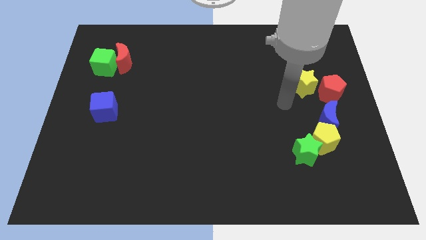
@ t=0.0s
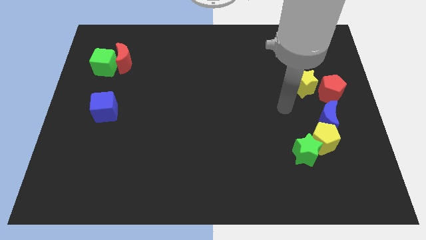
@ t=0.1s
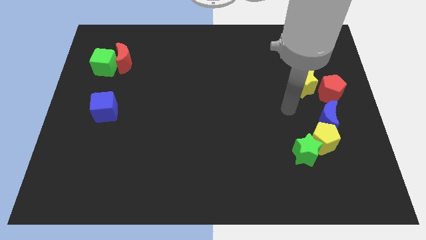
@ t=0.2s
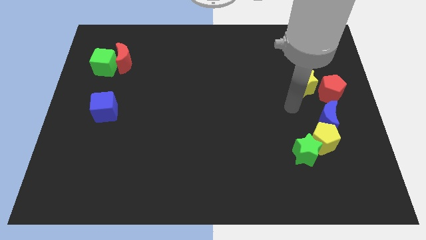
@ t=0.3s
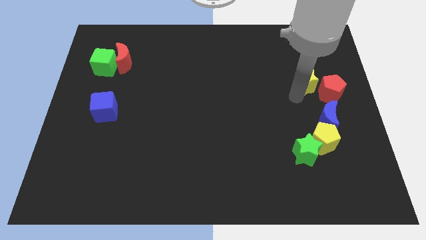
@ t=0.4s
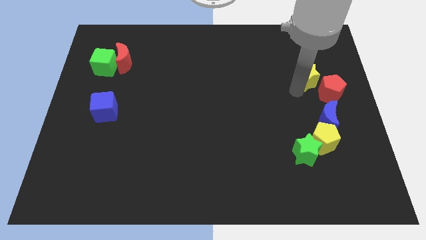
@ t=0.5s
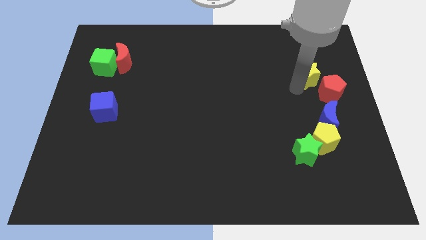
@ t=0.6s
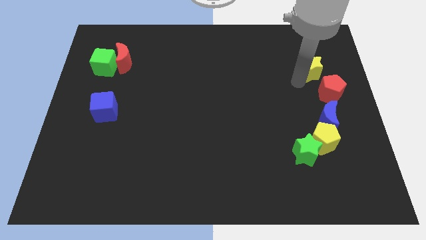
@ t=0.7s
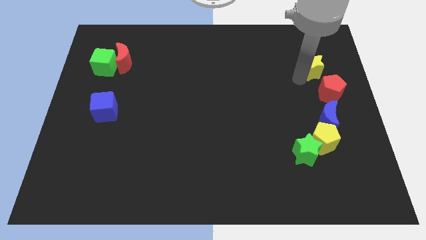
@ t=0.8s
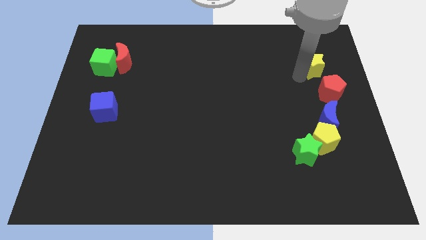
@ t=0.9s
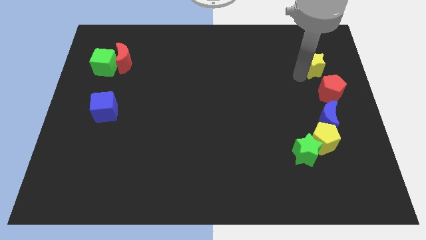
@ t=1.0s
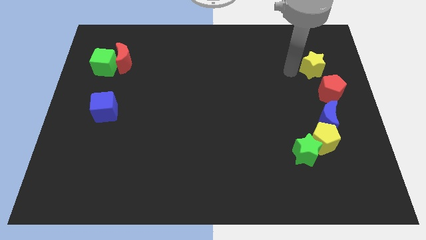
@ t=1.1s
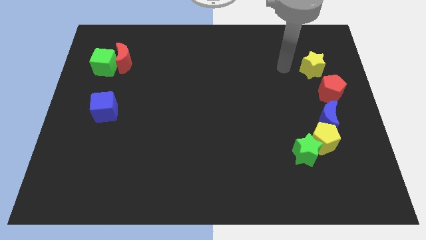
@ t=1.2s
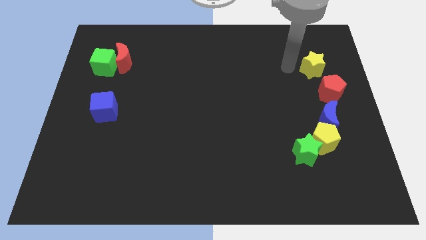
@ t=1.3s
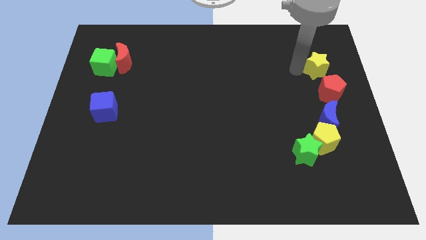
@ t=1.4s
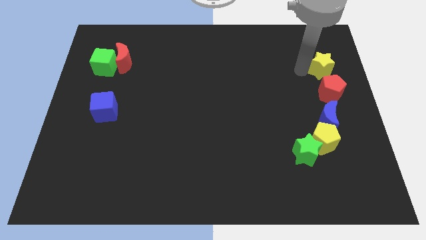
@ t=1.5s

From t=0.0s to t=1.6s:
place the yellow star on top of the red pentagon

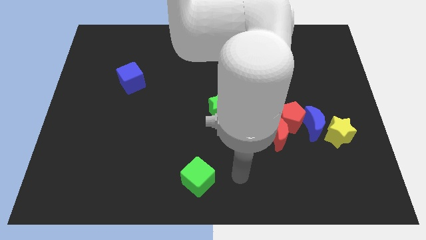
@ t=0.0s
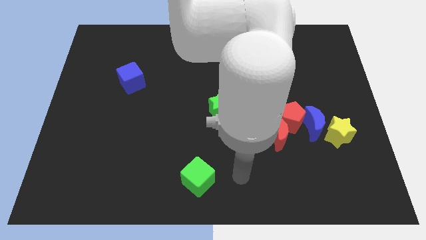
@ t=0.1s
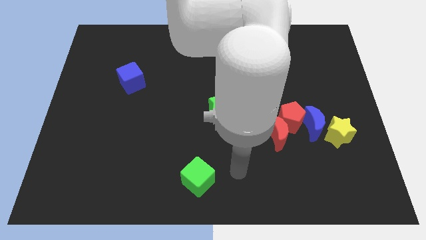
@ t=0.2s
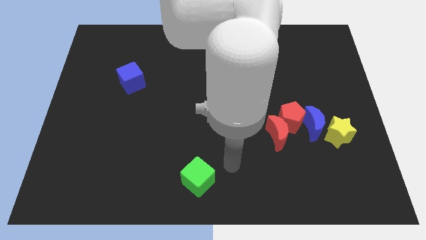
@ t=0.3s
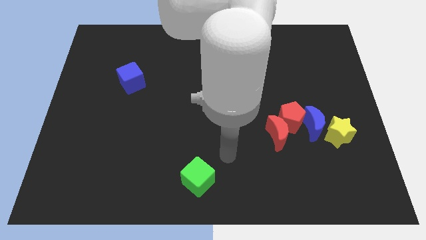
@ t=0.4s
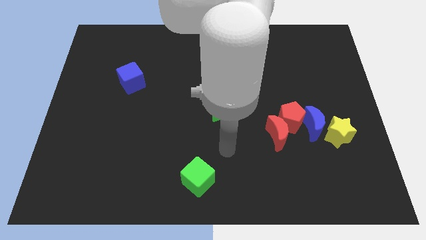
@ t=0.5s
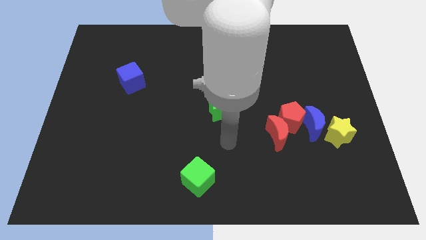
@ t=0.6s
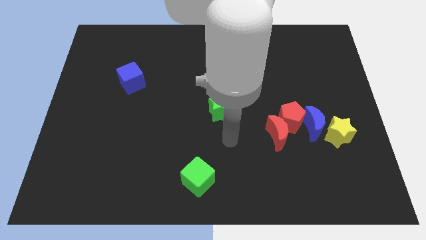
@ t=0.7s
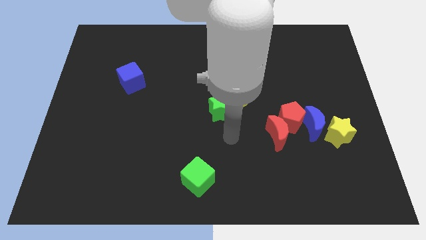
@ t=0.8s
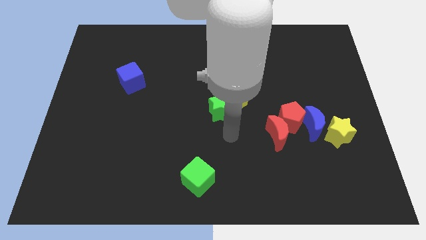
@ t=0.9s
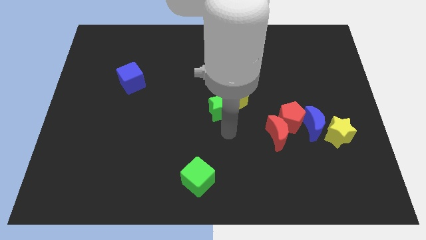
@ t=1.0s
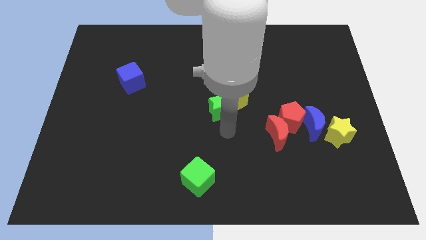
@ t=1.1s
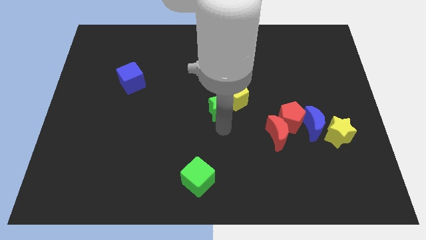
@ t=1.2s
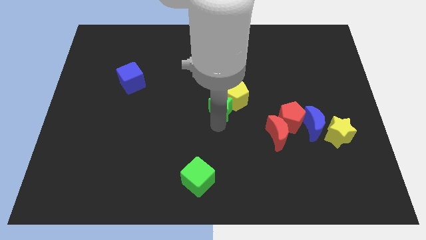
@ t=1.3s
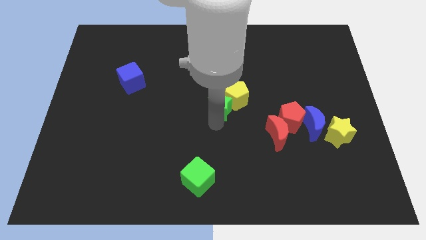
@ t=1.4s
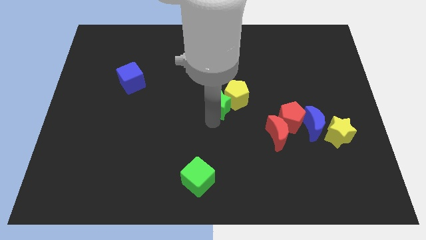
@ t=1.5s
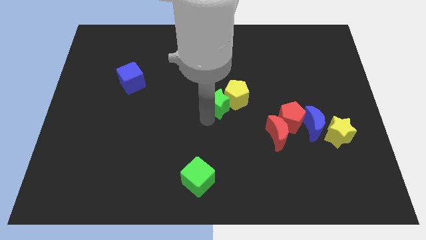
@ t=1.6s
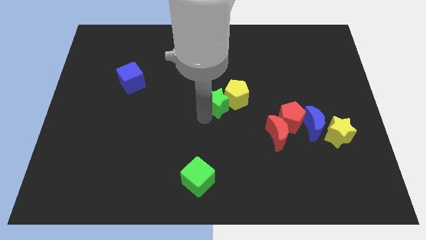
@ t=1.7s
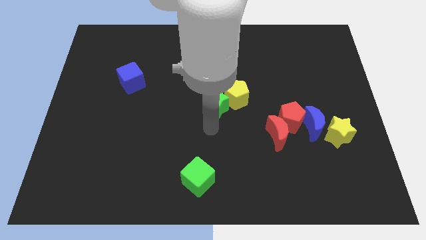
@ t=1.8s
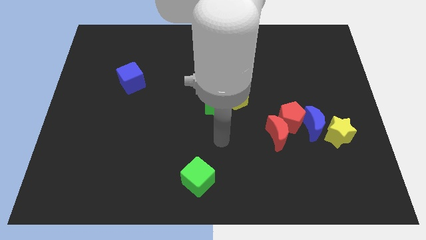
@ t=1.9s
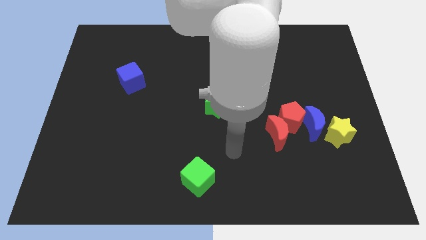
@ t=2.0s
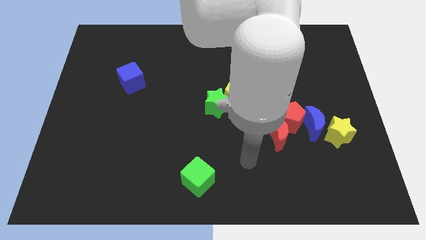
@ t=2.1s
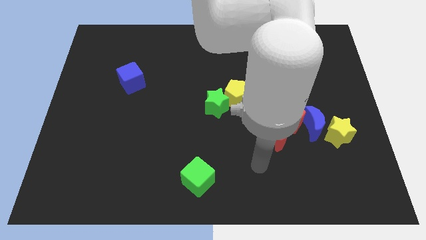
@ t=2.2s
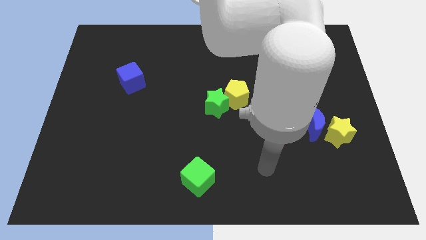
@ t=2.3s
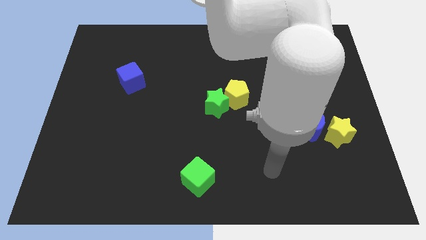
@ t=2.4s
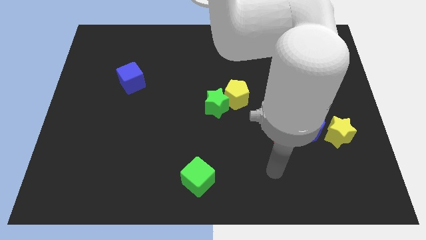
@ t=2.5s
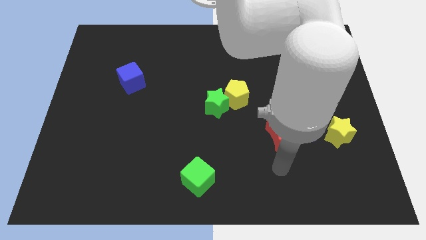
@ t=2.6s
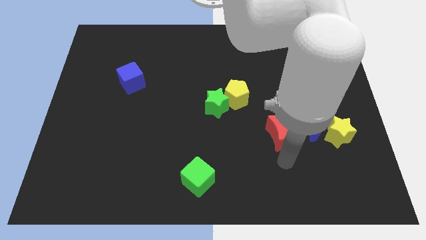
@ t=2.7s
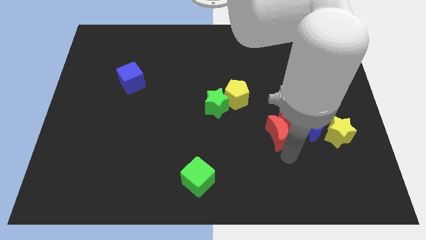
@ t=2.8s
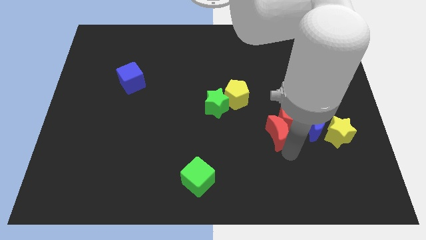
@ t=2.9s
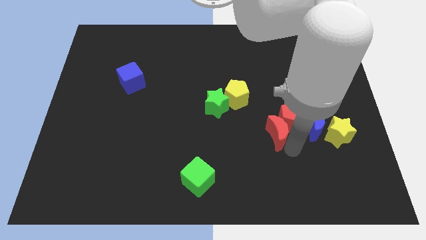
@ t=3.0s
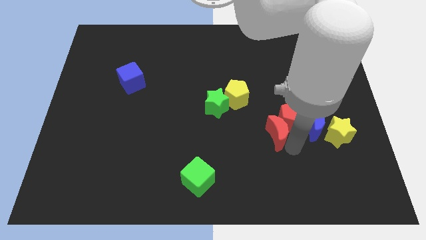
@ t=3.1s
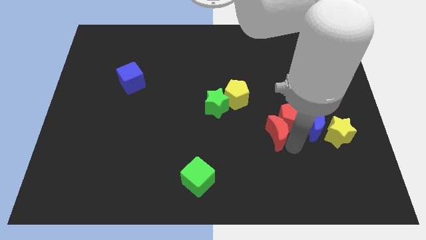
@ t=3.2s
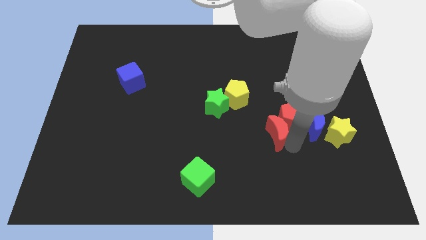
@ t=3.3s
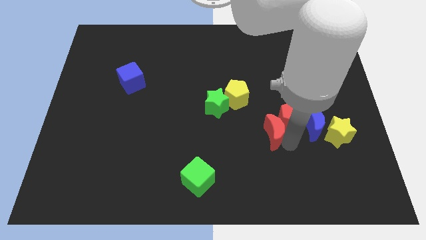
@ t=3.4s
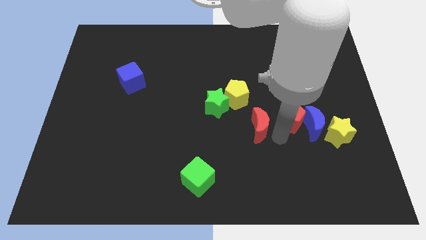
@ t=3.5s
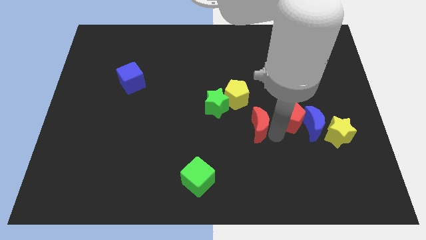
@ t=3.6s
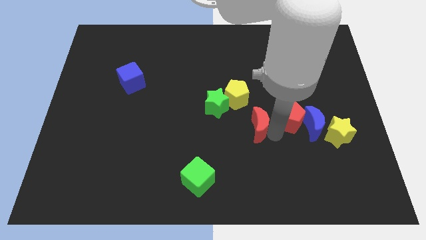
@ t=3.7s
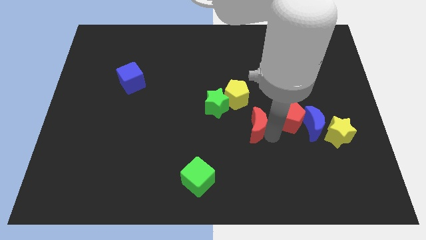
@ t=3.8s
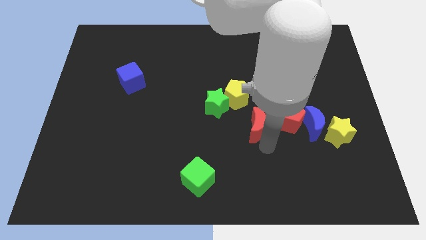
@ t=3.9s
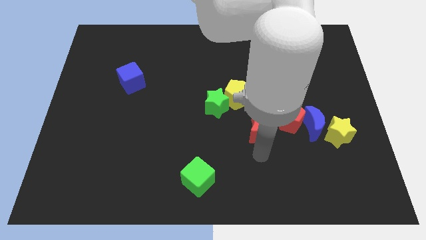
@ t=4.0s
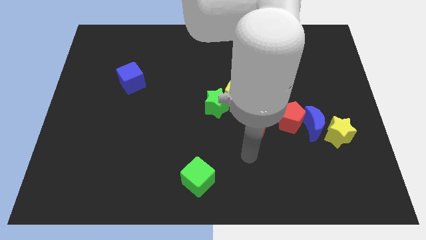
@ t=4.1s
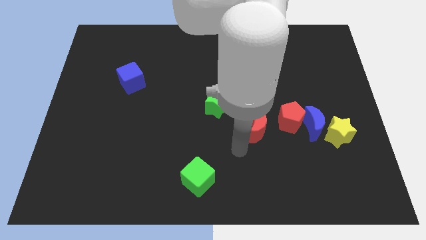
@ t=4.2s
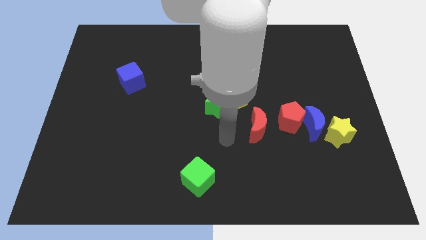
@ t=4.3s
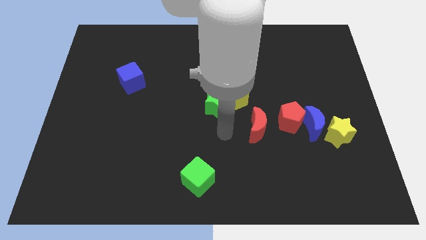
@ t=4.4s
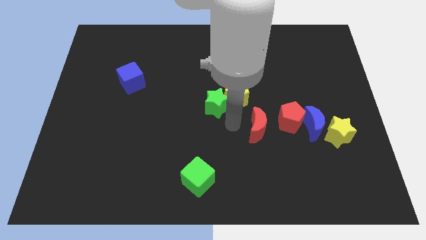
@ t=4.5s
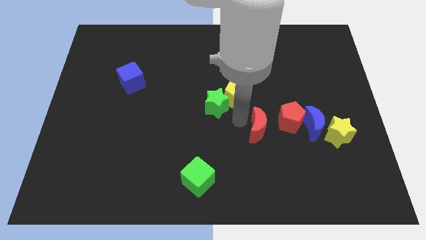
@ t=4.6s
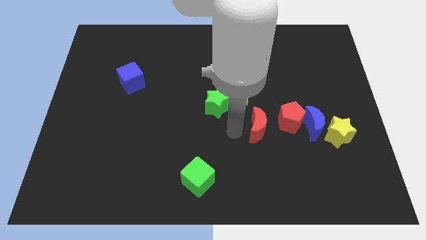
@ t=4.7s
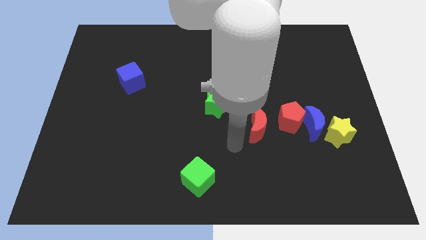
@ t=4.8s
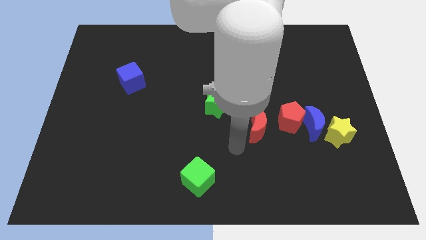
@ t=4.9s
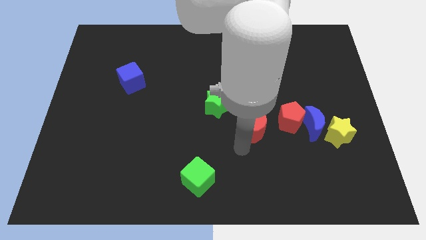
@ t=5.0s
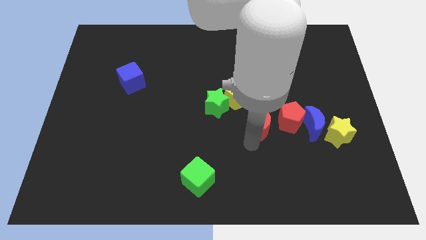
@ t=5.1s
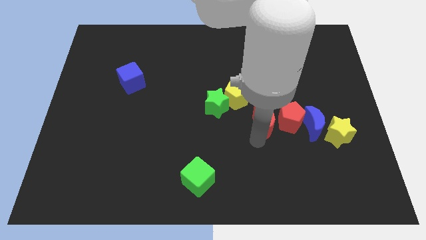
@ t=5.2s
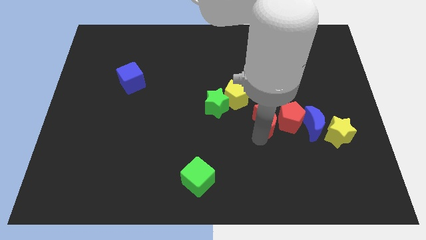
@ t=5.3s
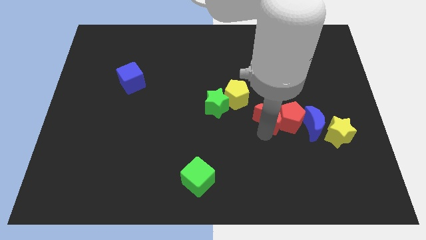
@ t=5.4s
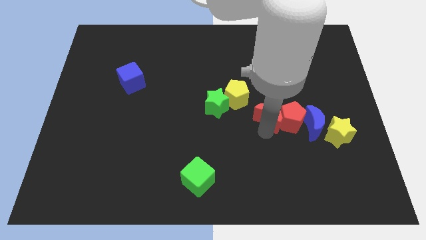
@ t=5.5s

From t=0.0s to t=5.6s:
push the red crescent close to the red pentagon

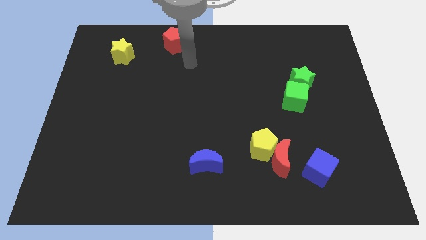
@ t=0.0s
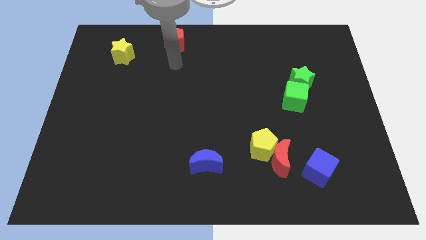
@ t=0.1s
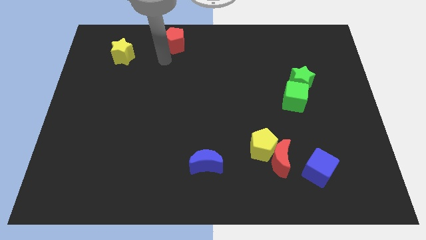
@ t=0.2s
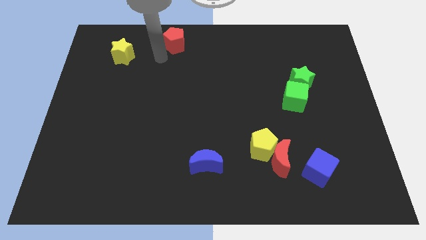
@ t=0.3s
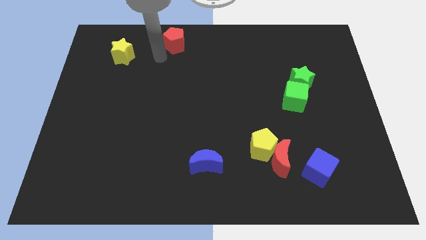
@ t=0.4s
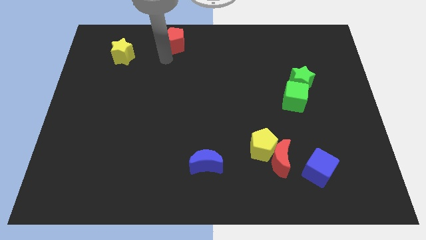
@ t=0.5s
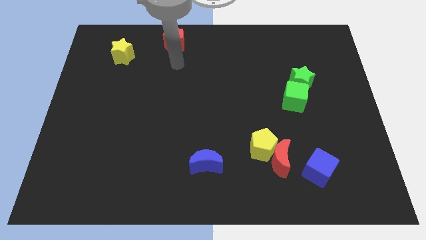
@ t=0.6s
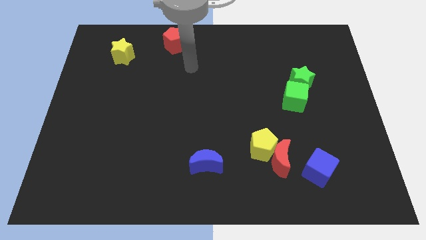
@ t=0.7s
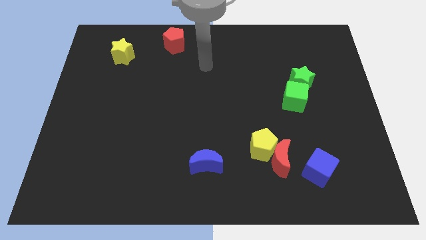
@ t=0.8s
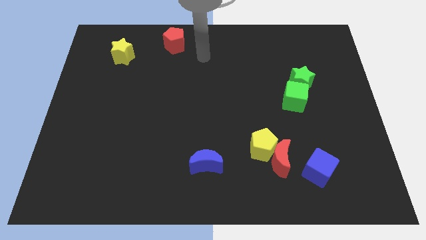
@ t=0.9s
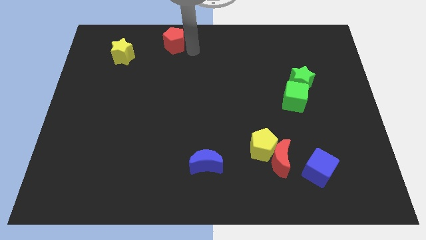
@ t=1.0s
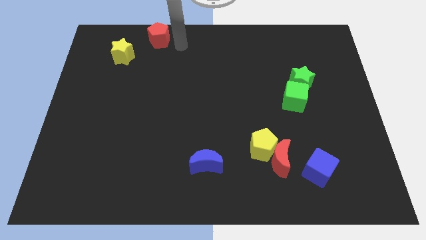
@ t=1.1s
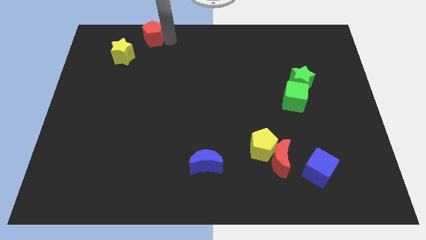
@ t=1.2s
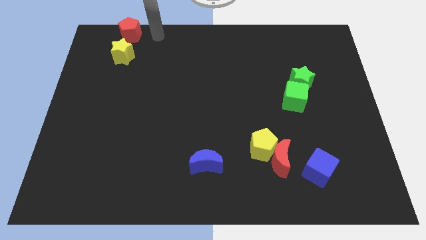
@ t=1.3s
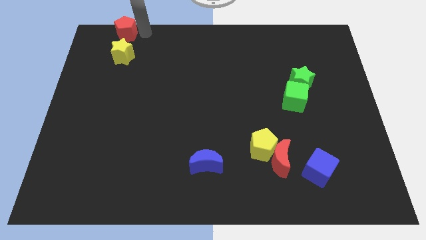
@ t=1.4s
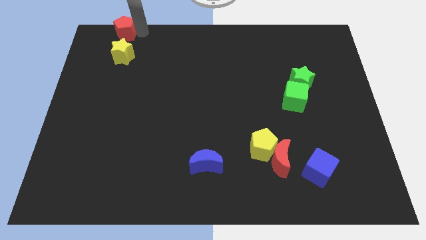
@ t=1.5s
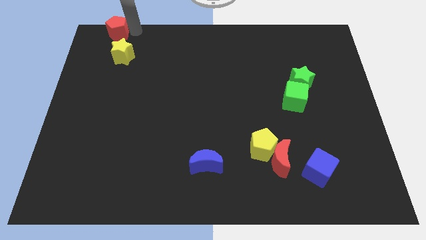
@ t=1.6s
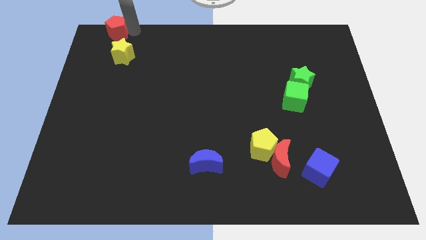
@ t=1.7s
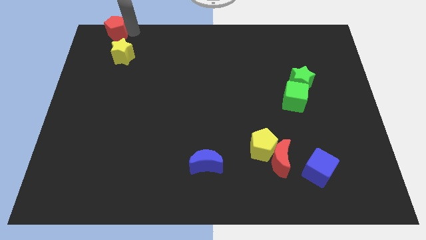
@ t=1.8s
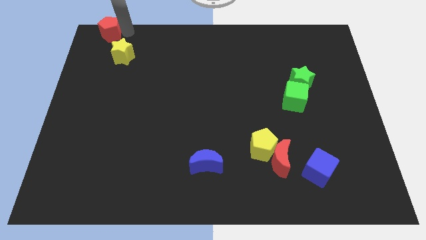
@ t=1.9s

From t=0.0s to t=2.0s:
place the red pentagon to the top left corner of the board
